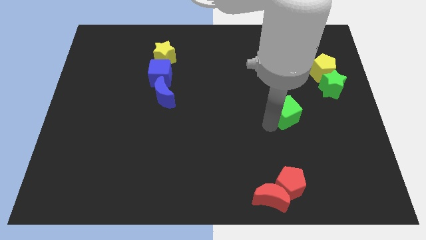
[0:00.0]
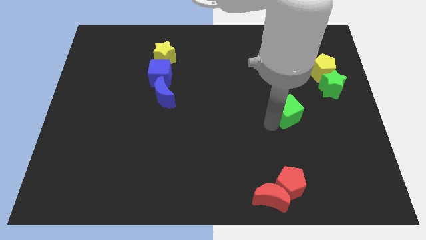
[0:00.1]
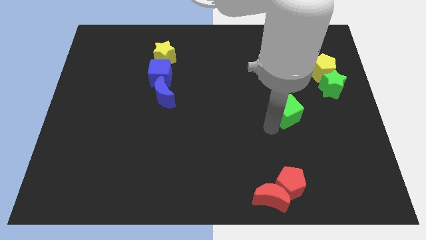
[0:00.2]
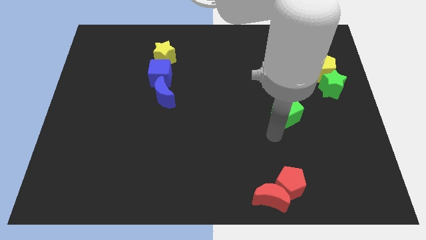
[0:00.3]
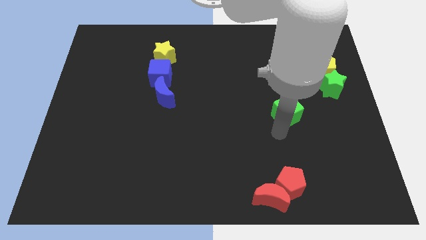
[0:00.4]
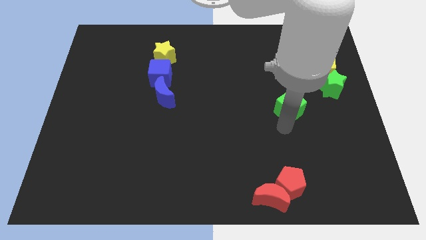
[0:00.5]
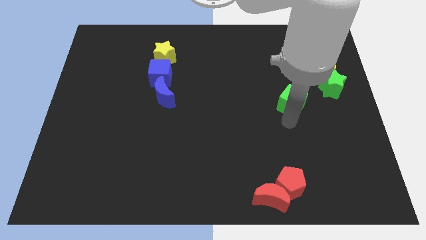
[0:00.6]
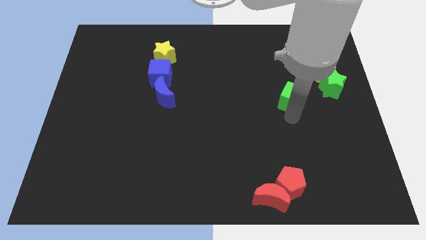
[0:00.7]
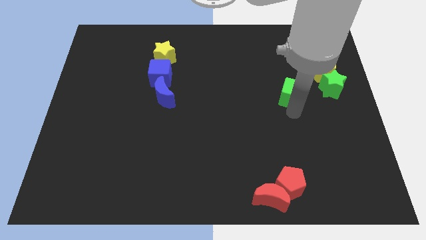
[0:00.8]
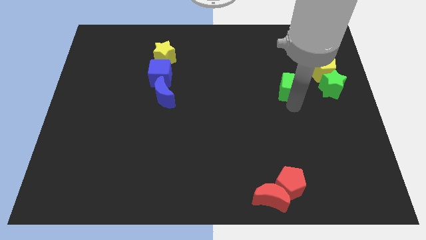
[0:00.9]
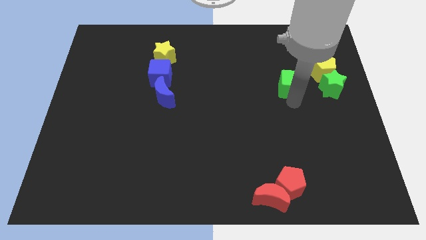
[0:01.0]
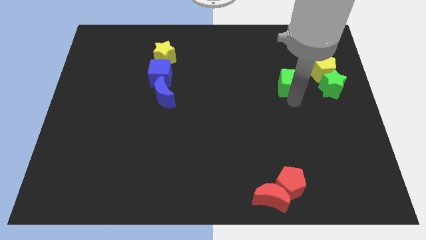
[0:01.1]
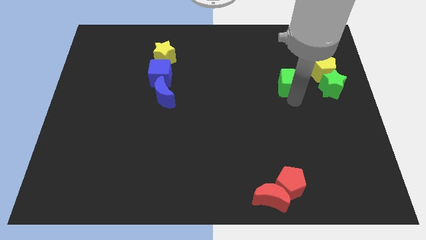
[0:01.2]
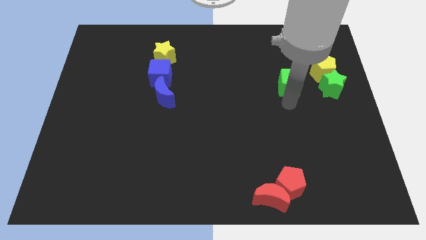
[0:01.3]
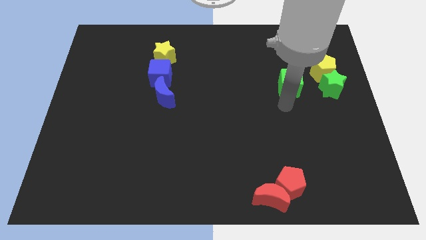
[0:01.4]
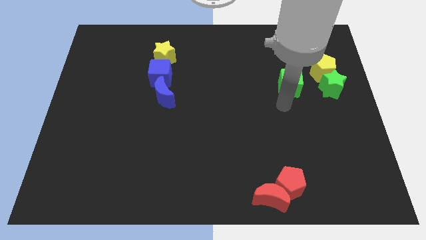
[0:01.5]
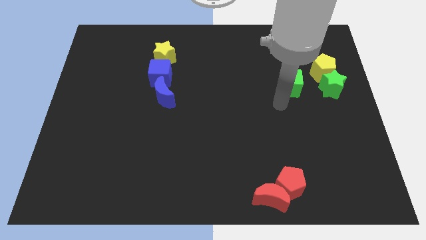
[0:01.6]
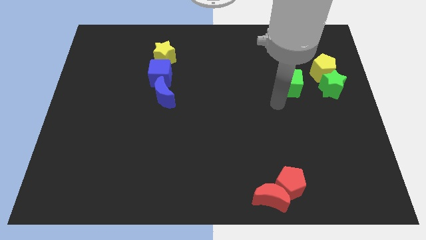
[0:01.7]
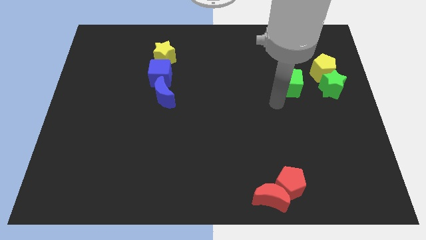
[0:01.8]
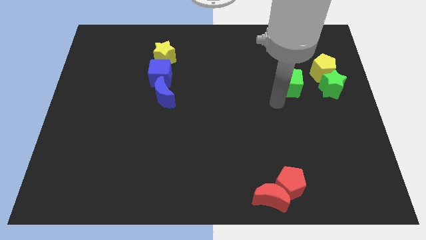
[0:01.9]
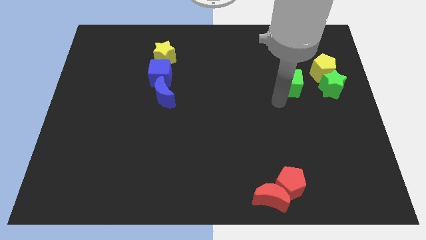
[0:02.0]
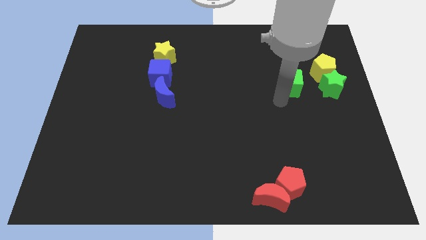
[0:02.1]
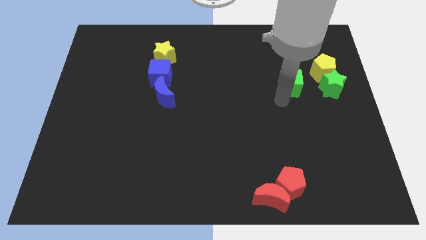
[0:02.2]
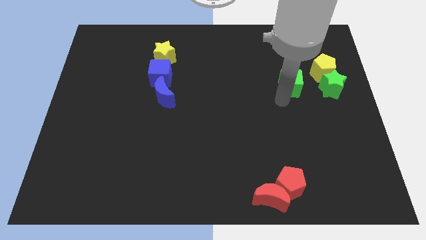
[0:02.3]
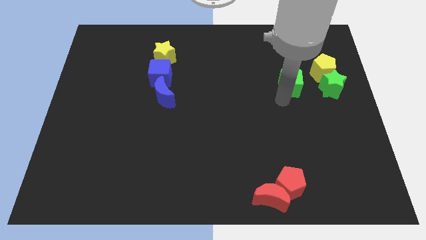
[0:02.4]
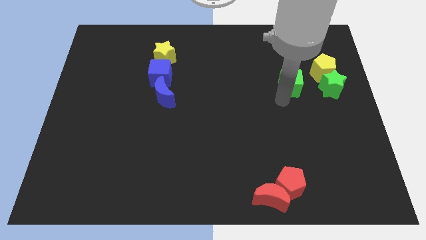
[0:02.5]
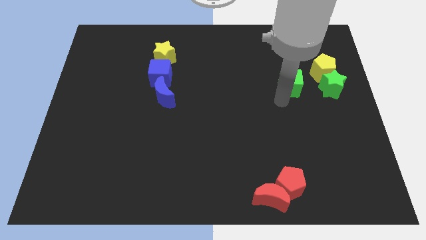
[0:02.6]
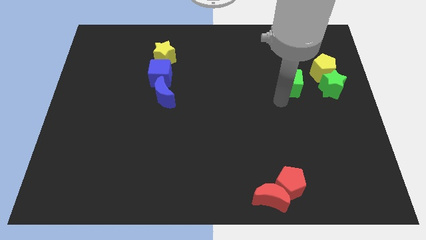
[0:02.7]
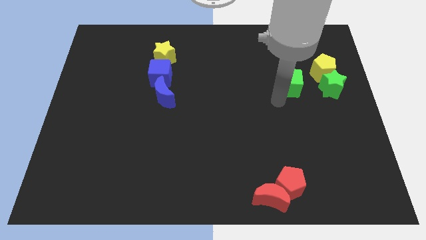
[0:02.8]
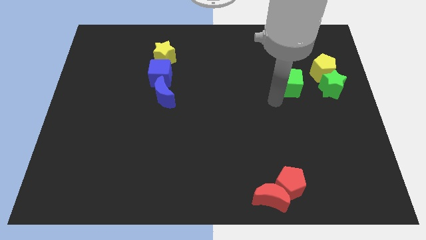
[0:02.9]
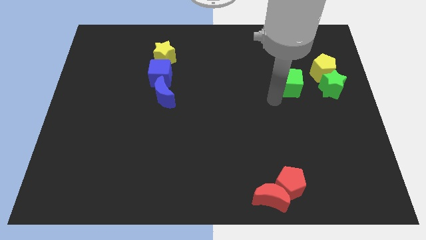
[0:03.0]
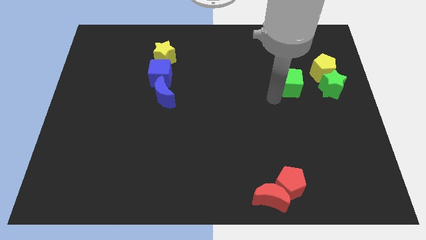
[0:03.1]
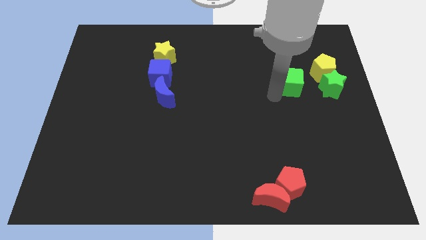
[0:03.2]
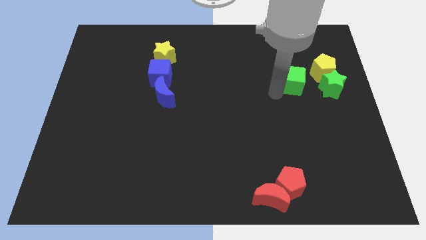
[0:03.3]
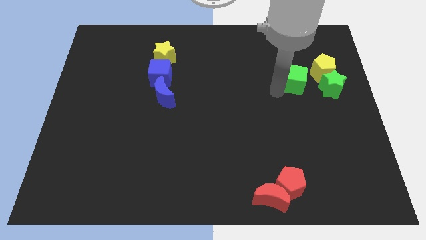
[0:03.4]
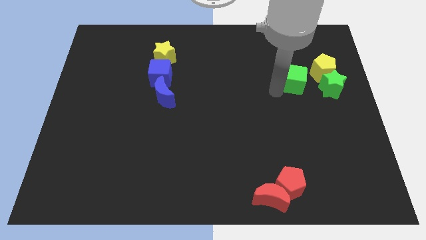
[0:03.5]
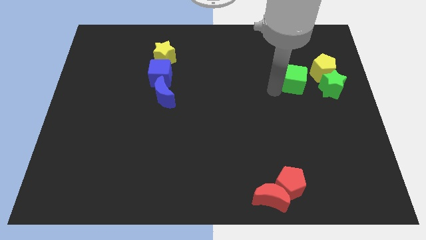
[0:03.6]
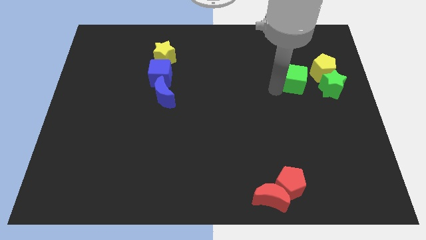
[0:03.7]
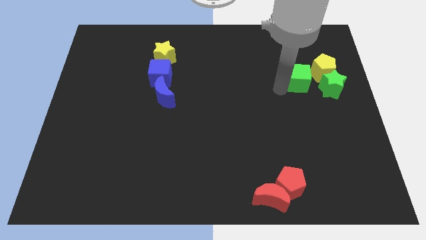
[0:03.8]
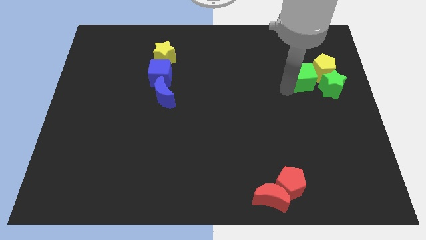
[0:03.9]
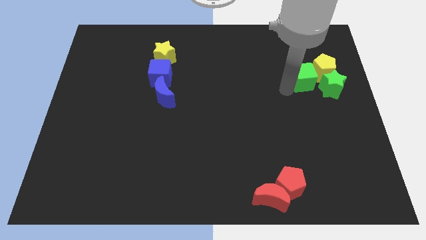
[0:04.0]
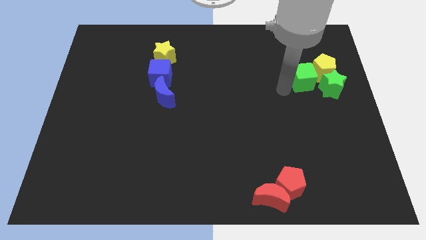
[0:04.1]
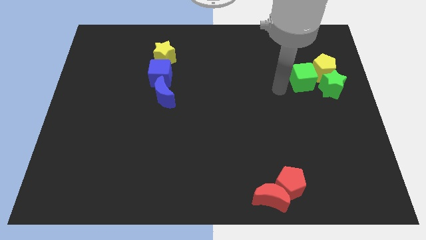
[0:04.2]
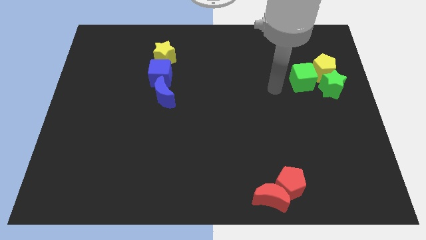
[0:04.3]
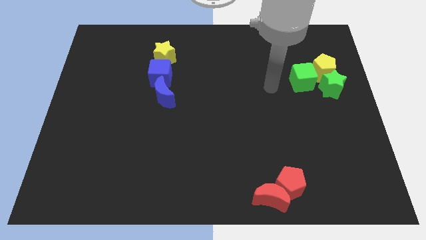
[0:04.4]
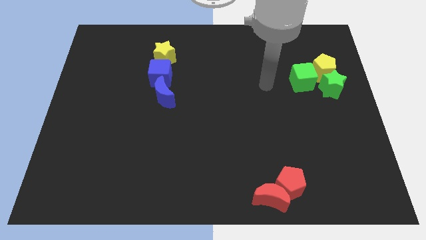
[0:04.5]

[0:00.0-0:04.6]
place green cube to the left of yellow pentagon

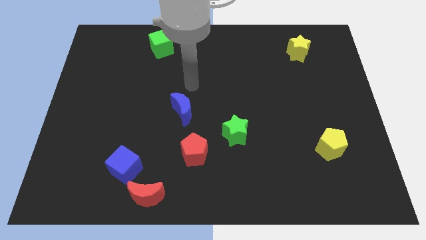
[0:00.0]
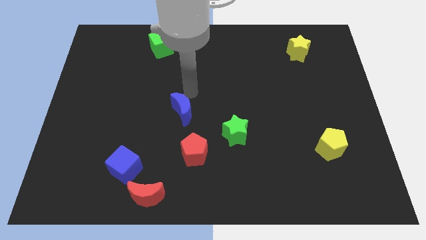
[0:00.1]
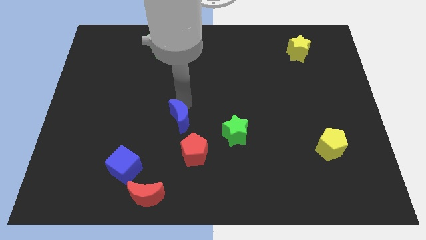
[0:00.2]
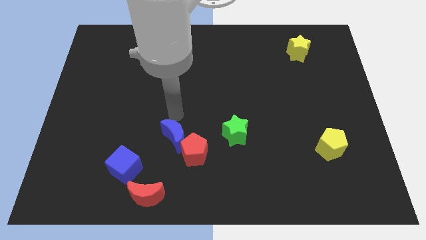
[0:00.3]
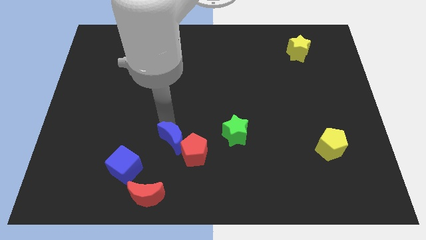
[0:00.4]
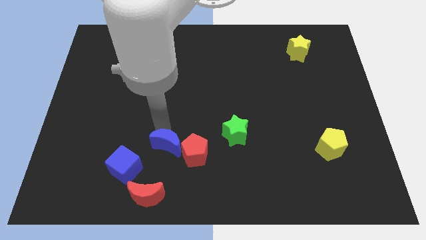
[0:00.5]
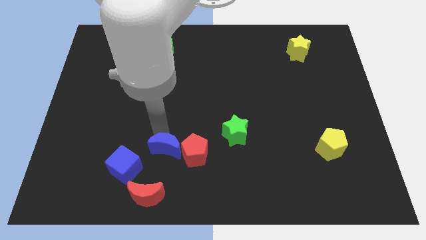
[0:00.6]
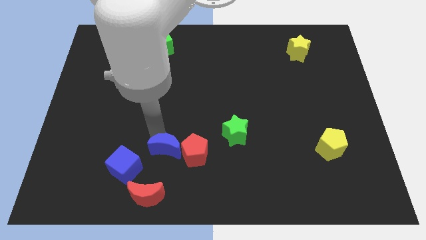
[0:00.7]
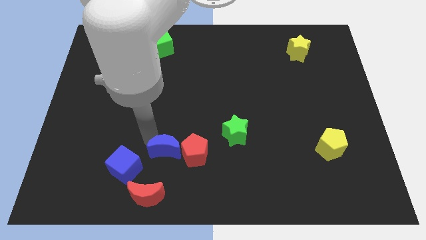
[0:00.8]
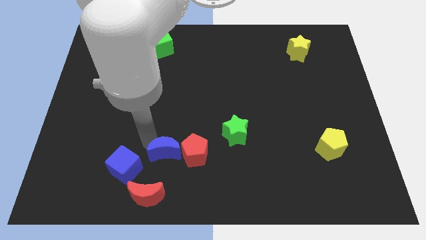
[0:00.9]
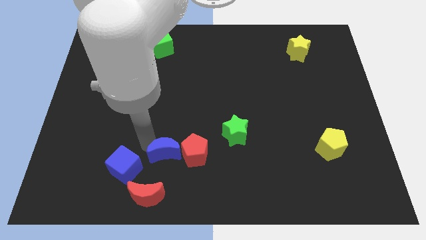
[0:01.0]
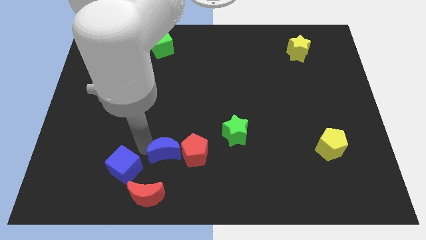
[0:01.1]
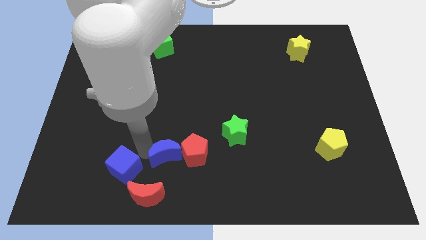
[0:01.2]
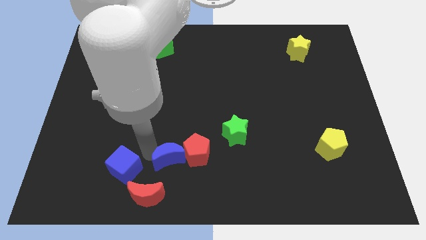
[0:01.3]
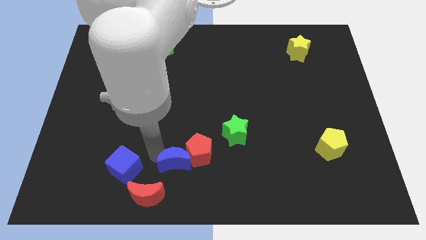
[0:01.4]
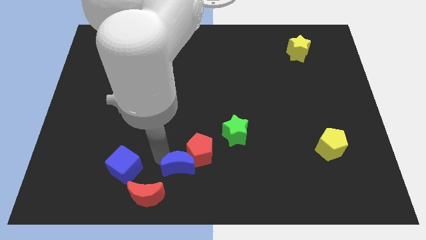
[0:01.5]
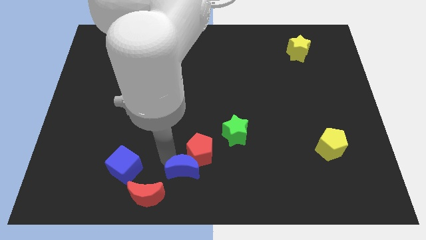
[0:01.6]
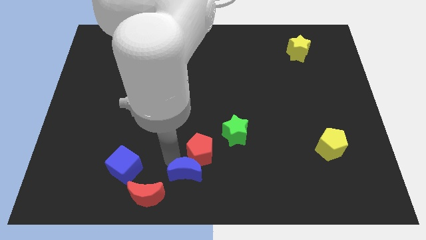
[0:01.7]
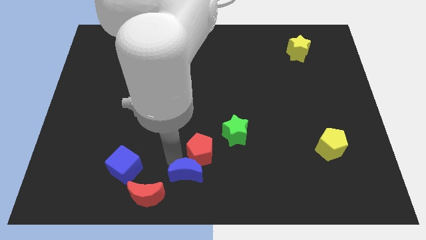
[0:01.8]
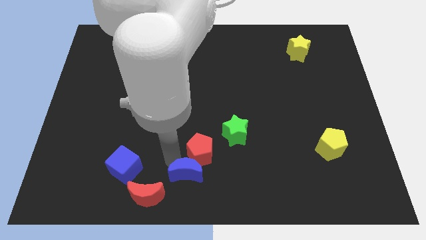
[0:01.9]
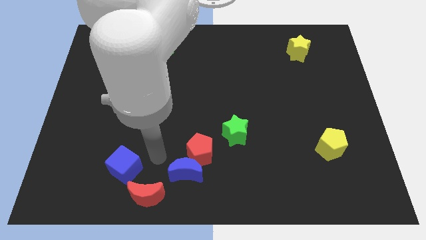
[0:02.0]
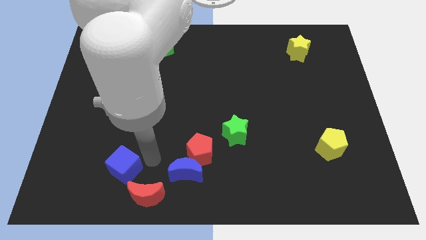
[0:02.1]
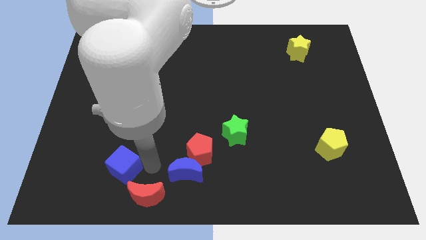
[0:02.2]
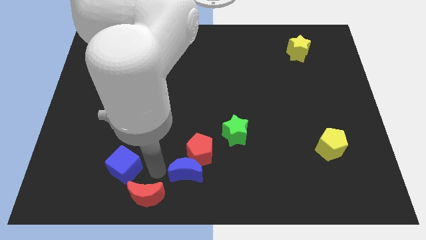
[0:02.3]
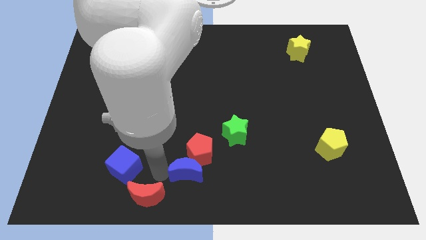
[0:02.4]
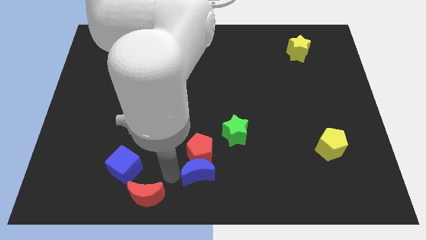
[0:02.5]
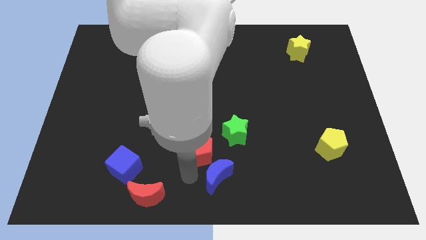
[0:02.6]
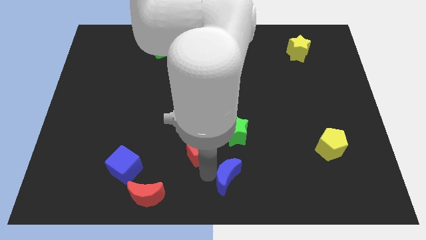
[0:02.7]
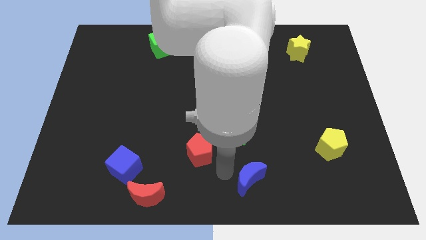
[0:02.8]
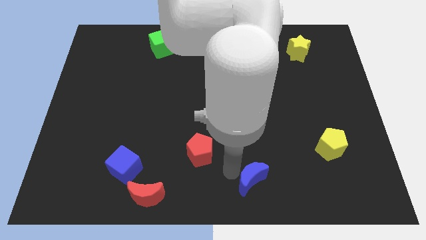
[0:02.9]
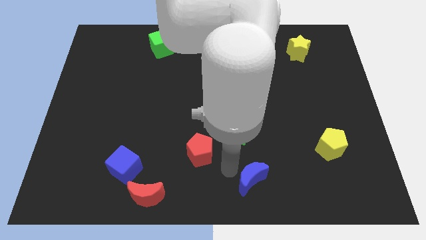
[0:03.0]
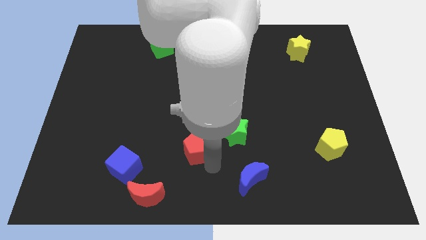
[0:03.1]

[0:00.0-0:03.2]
place blue moon below the green star

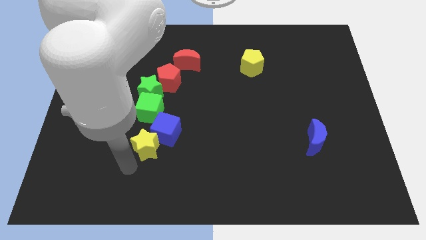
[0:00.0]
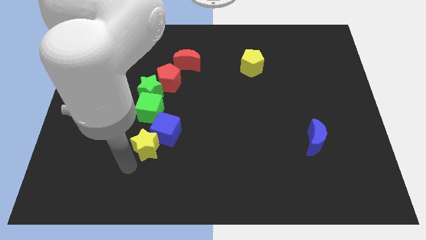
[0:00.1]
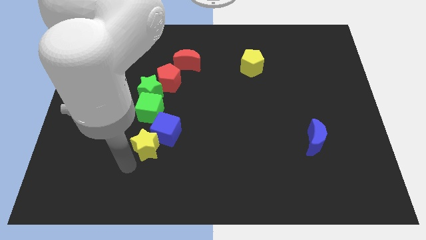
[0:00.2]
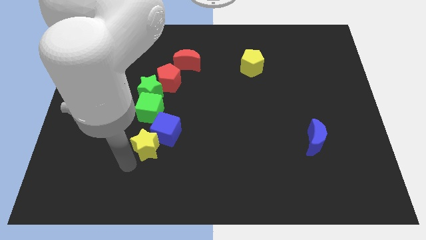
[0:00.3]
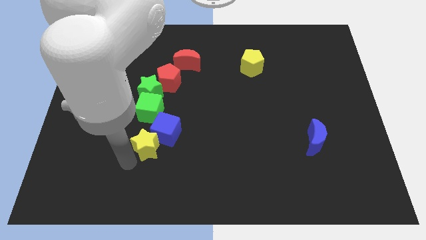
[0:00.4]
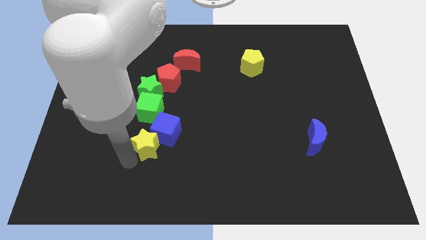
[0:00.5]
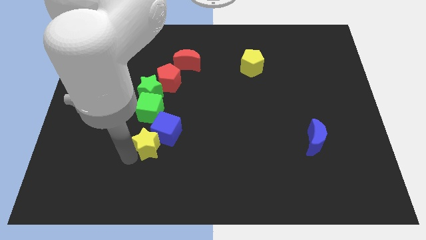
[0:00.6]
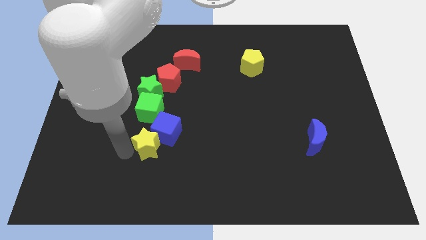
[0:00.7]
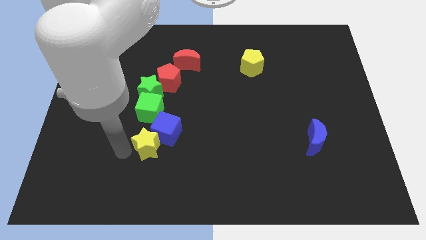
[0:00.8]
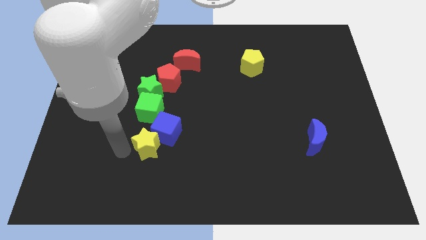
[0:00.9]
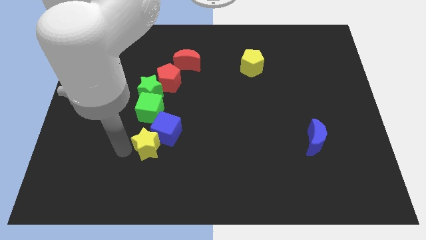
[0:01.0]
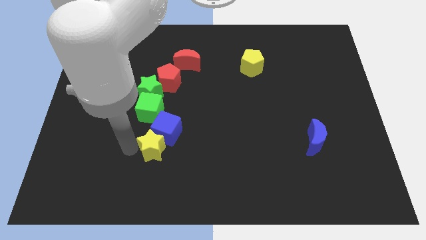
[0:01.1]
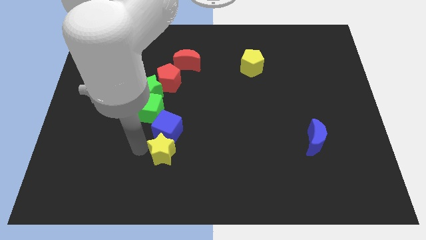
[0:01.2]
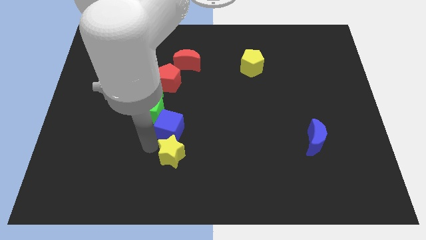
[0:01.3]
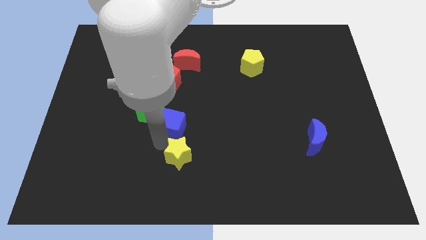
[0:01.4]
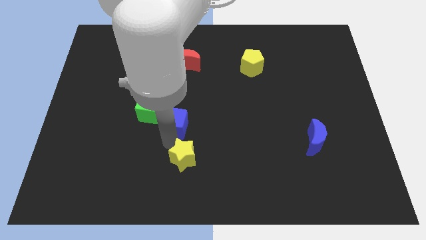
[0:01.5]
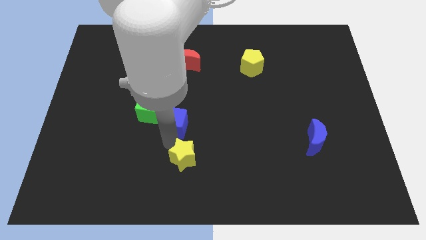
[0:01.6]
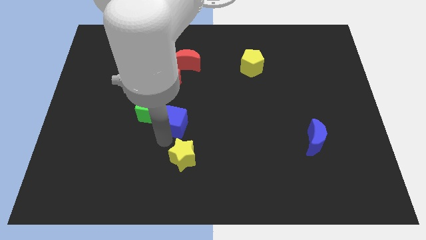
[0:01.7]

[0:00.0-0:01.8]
separate the yellow star from the blue cube
